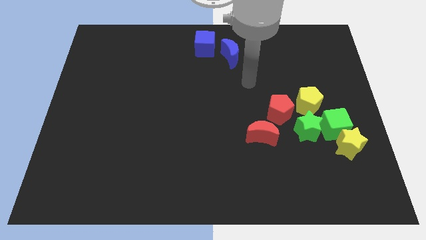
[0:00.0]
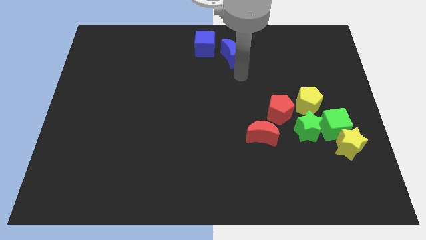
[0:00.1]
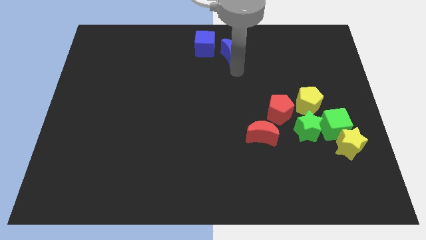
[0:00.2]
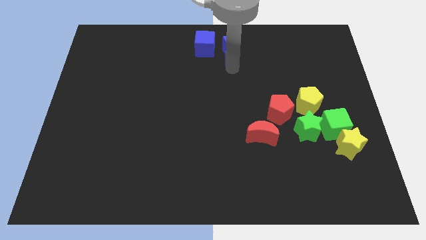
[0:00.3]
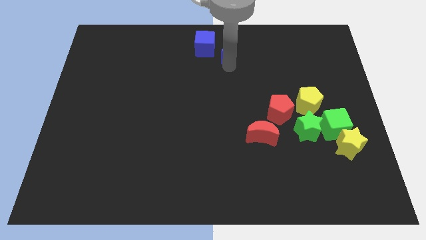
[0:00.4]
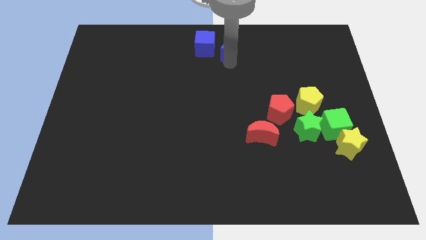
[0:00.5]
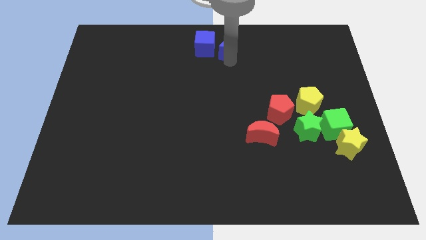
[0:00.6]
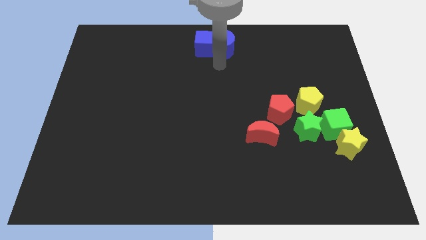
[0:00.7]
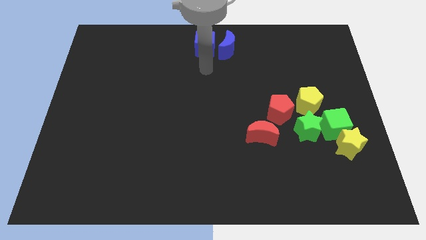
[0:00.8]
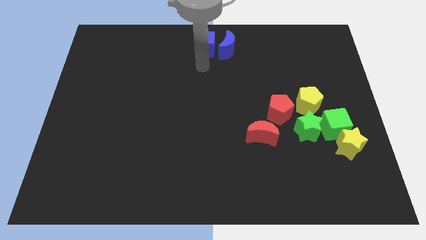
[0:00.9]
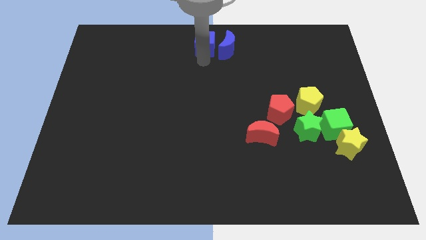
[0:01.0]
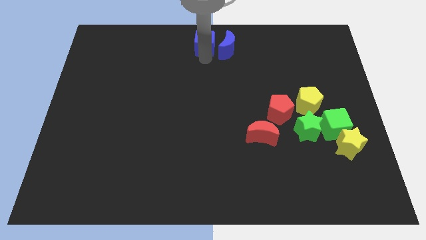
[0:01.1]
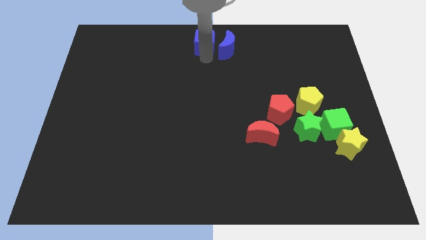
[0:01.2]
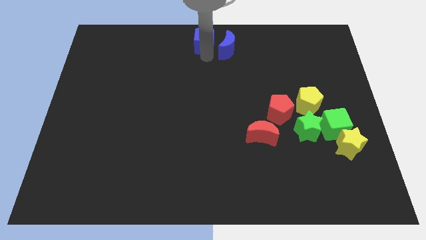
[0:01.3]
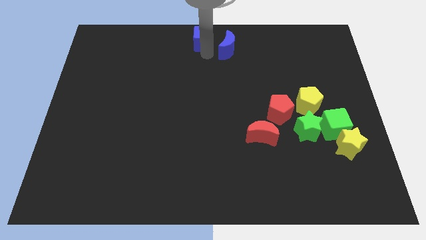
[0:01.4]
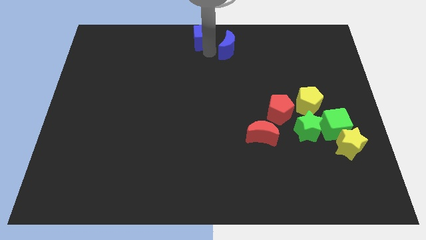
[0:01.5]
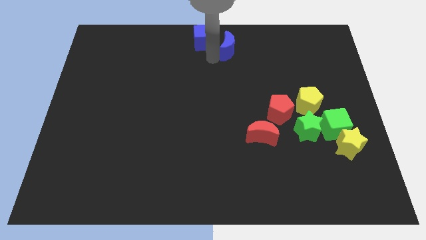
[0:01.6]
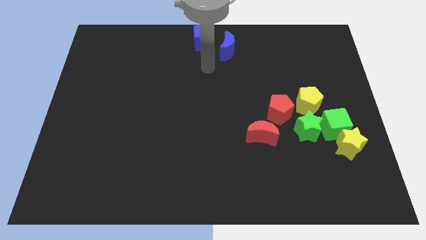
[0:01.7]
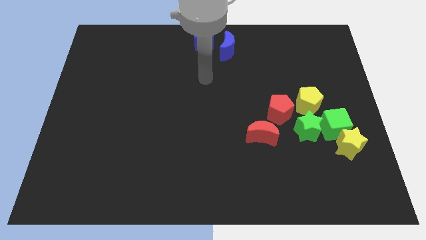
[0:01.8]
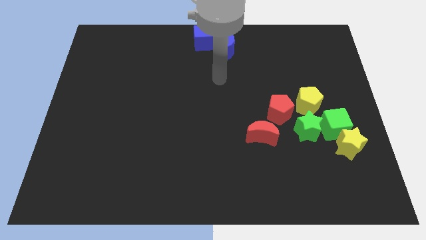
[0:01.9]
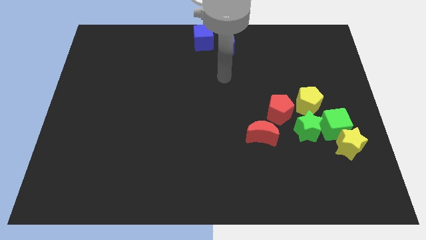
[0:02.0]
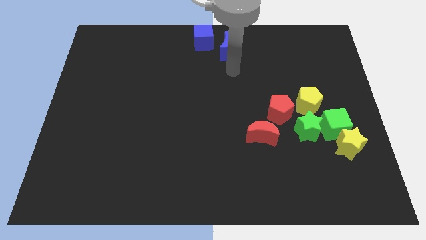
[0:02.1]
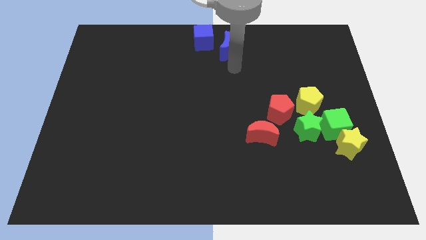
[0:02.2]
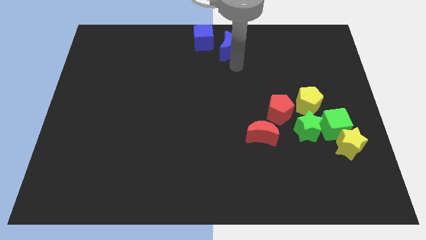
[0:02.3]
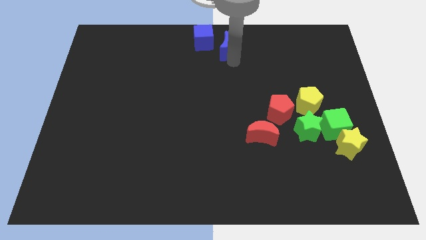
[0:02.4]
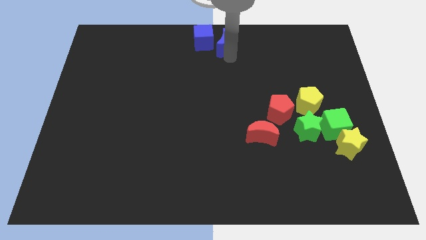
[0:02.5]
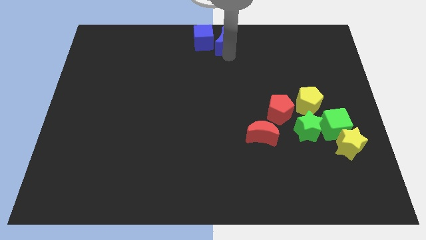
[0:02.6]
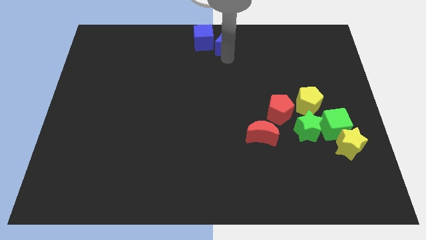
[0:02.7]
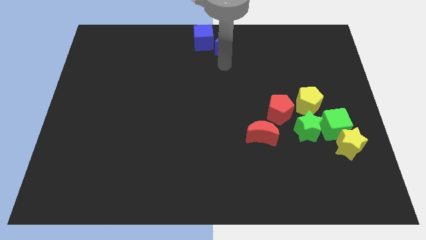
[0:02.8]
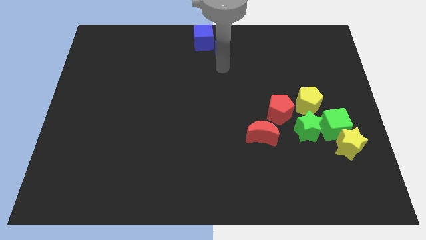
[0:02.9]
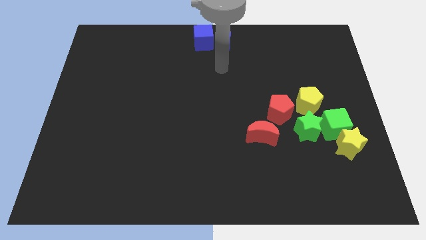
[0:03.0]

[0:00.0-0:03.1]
adjust the blue moon and blue cube to the top center of the board

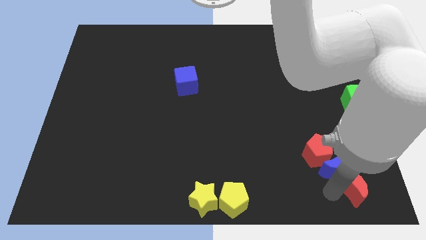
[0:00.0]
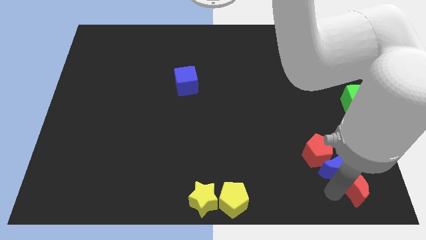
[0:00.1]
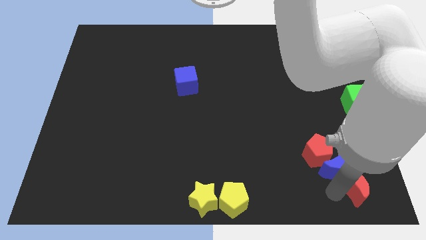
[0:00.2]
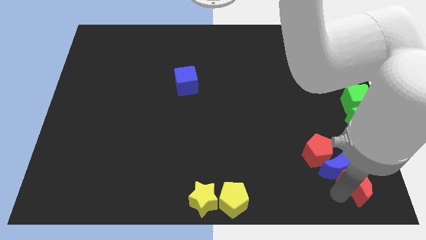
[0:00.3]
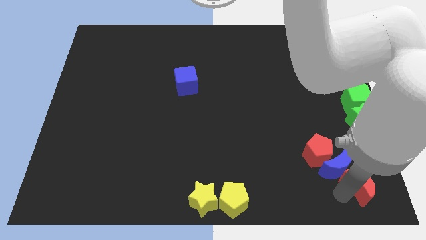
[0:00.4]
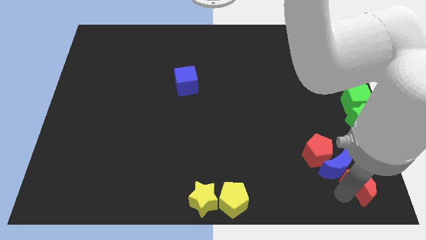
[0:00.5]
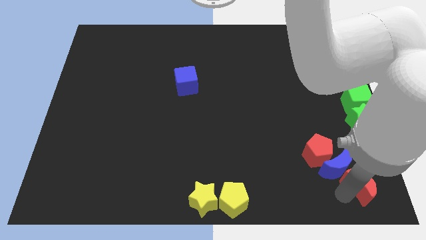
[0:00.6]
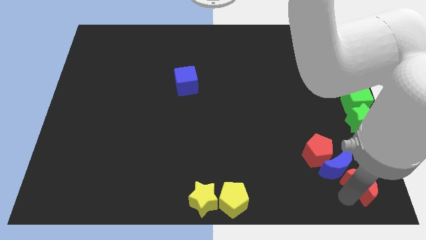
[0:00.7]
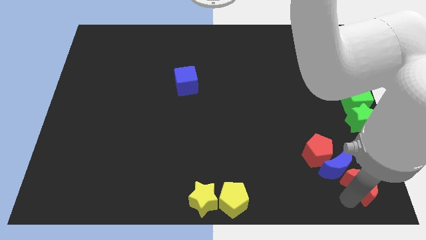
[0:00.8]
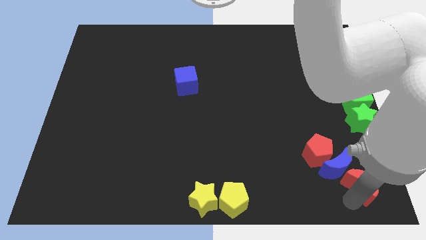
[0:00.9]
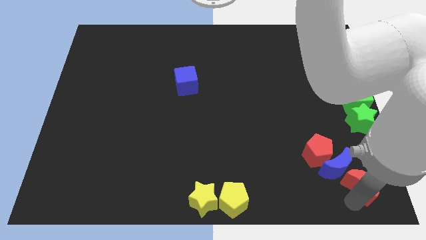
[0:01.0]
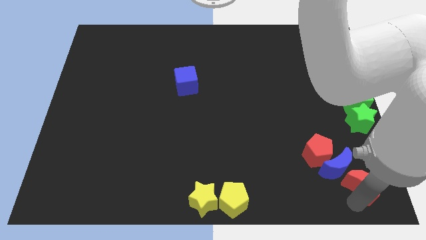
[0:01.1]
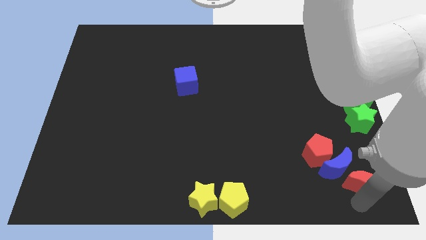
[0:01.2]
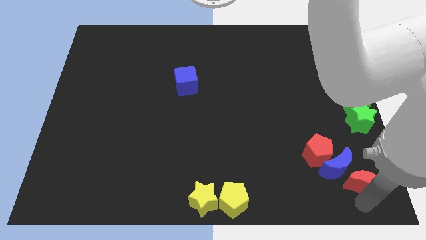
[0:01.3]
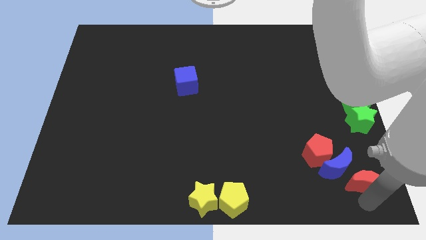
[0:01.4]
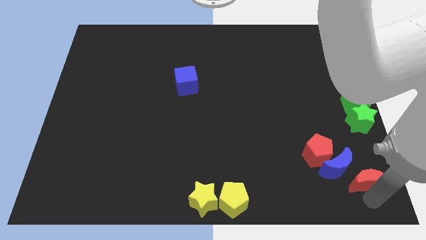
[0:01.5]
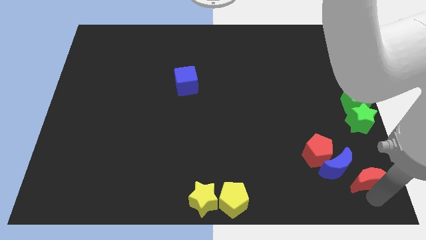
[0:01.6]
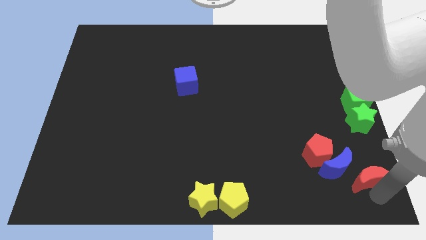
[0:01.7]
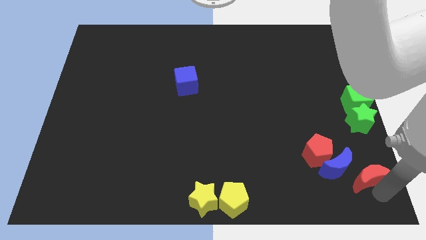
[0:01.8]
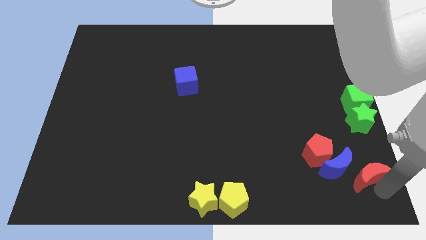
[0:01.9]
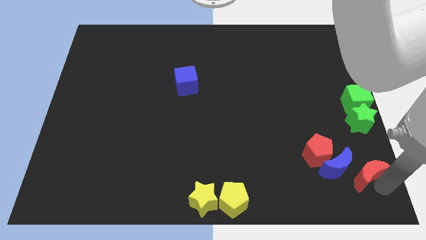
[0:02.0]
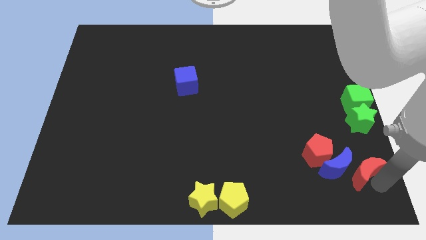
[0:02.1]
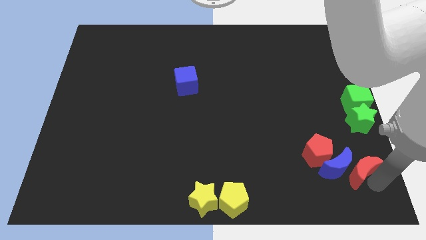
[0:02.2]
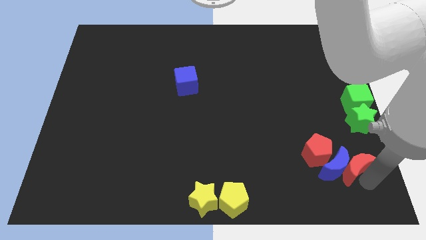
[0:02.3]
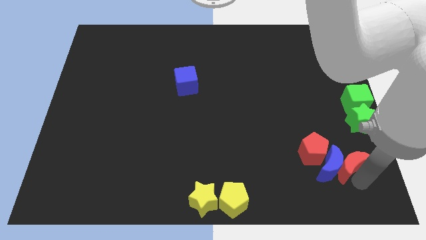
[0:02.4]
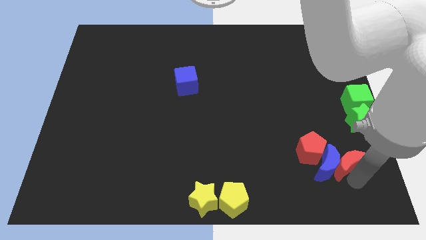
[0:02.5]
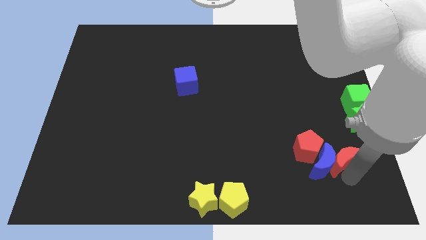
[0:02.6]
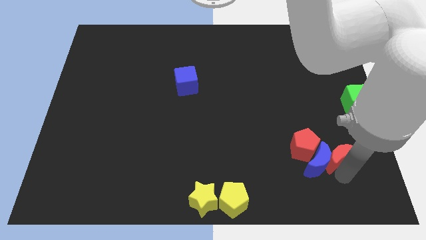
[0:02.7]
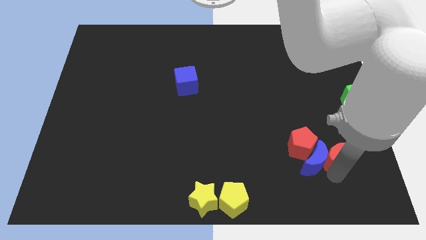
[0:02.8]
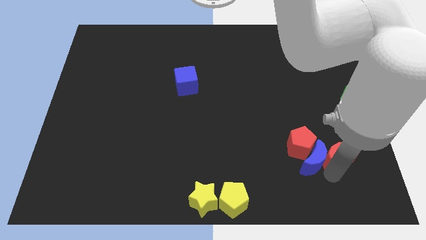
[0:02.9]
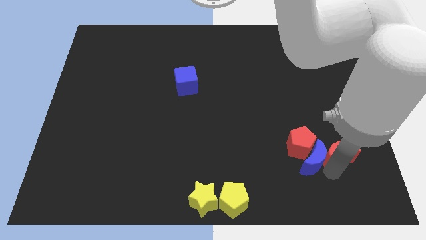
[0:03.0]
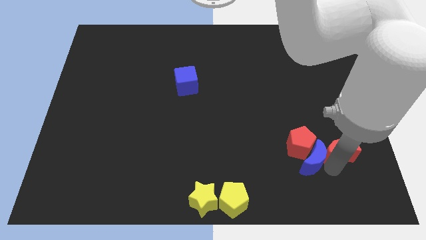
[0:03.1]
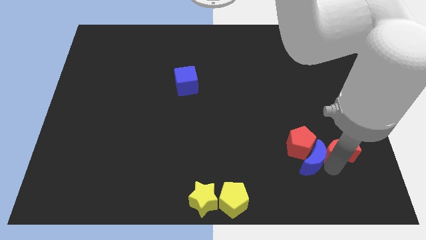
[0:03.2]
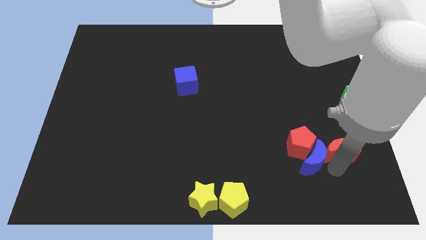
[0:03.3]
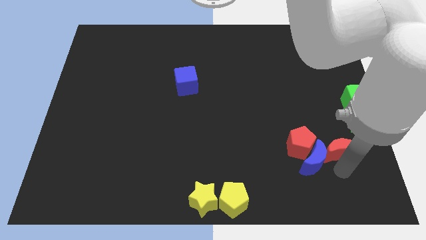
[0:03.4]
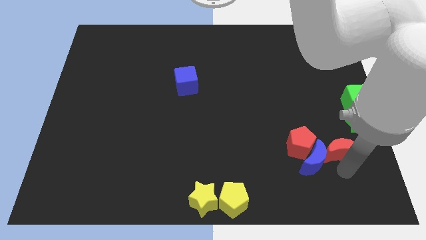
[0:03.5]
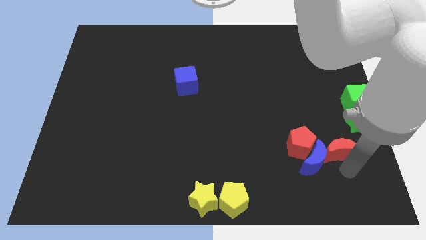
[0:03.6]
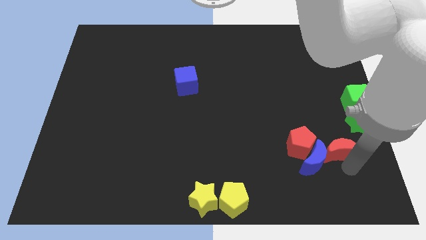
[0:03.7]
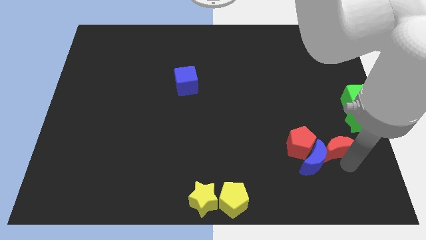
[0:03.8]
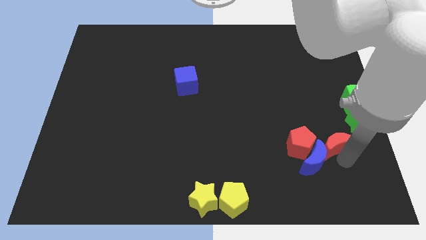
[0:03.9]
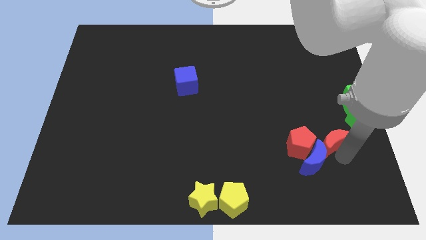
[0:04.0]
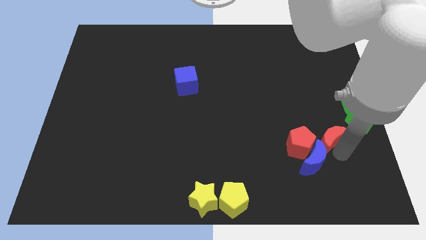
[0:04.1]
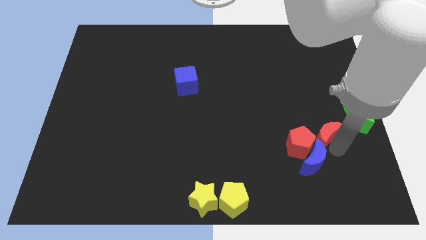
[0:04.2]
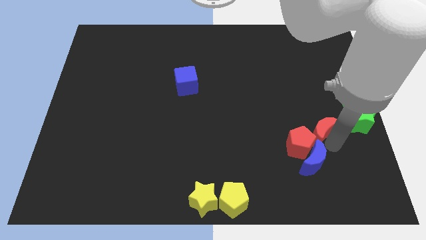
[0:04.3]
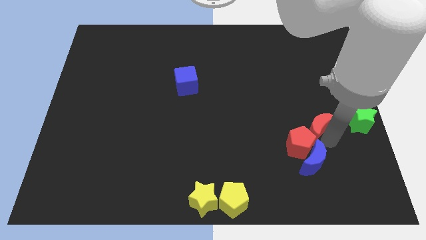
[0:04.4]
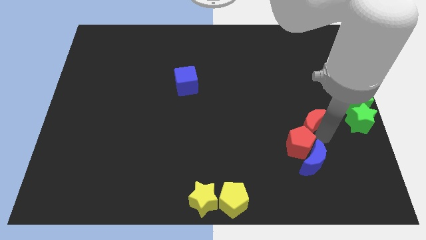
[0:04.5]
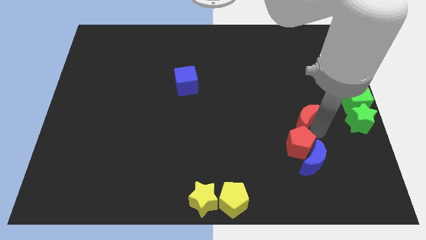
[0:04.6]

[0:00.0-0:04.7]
separate the red moon from blue moon

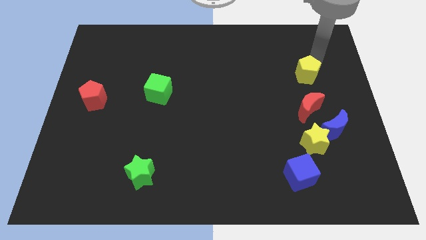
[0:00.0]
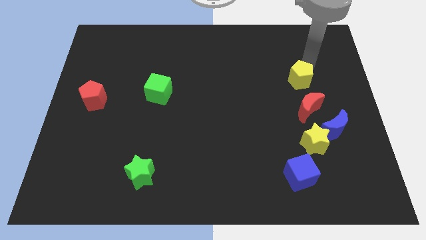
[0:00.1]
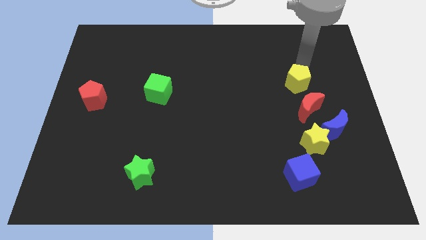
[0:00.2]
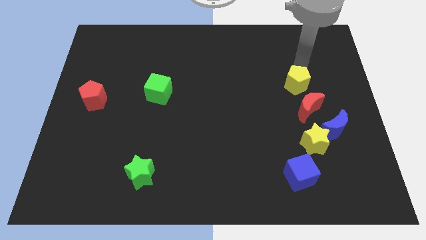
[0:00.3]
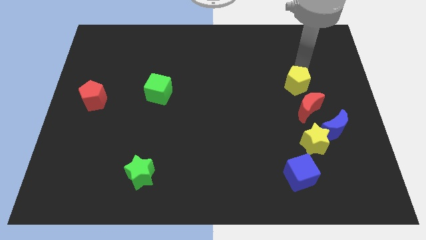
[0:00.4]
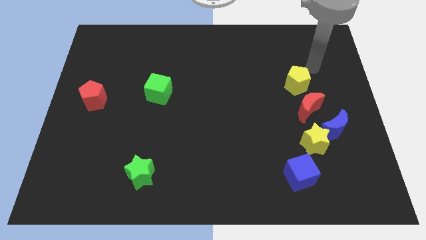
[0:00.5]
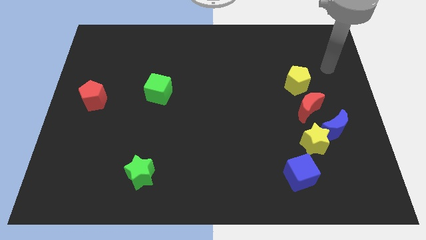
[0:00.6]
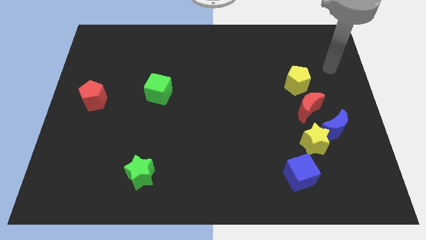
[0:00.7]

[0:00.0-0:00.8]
push the yellow pentagon close to the red crescent

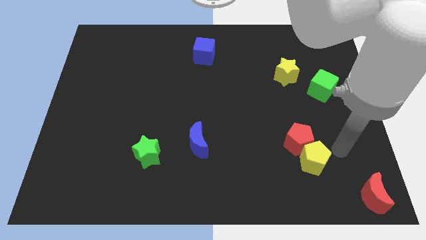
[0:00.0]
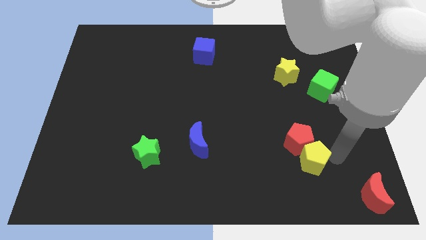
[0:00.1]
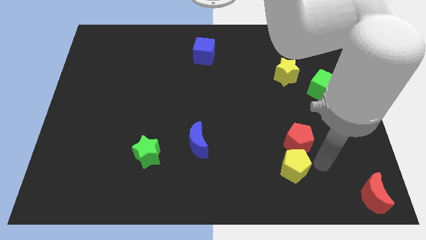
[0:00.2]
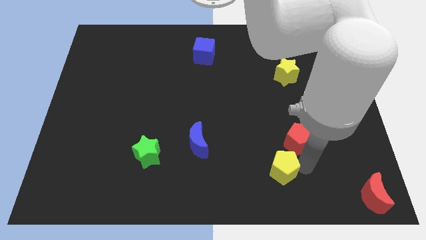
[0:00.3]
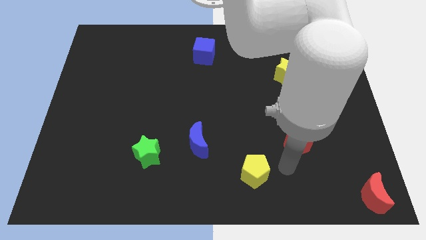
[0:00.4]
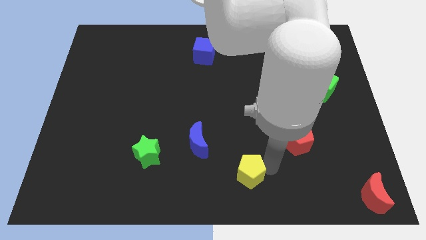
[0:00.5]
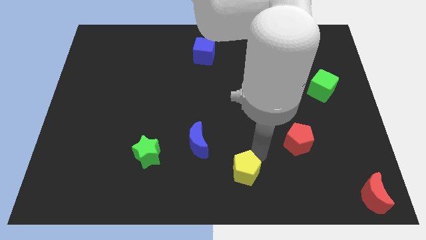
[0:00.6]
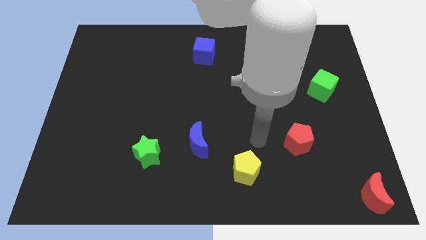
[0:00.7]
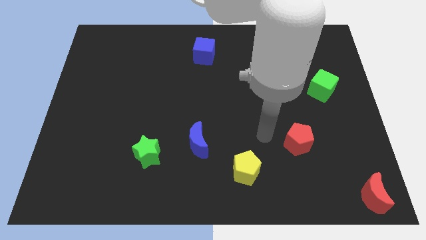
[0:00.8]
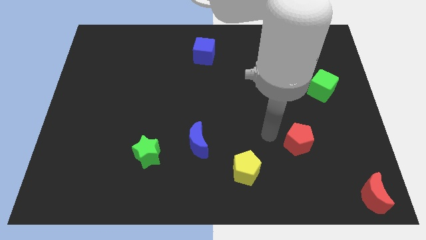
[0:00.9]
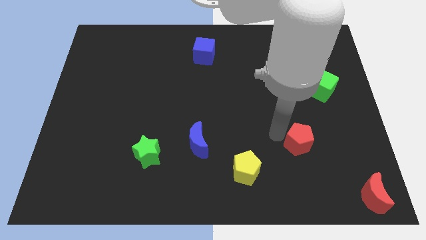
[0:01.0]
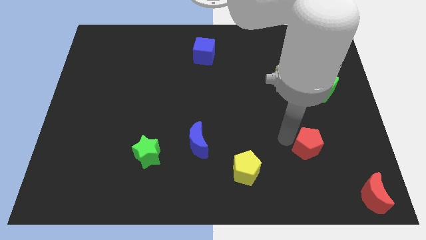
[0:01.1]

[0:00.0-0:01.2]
move the yellow pentagon away from the red pentagon
